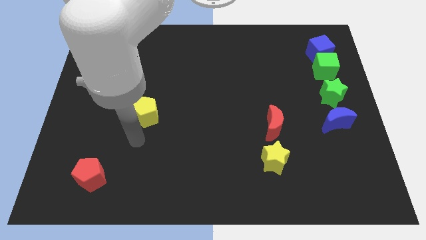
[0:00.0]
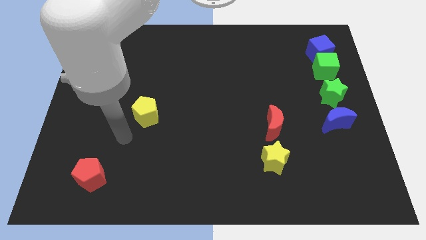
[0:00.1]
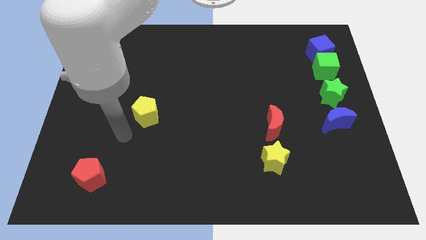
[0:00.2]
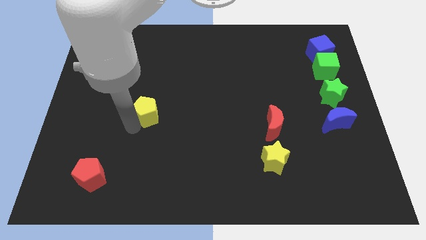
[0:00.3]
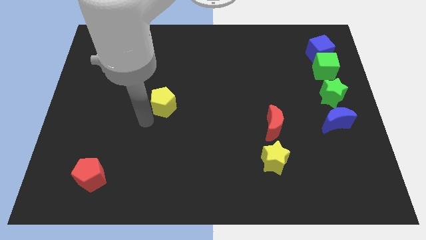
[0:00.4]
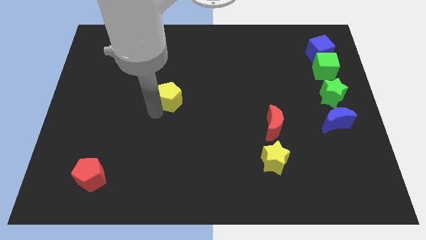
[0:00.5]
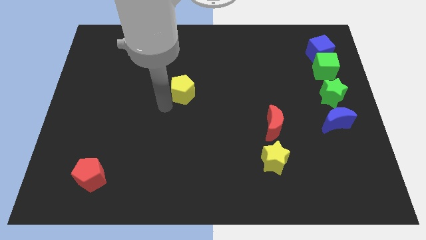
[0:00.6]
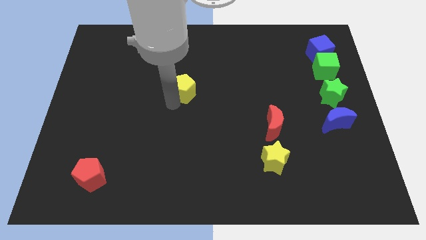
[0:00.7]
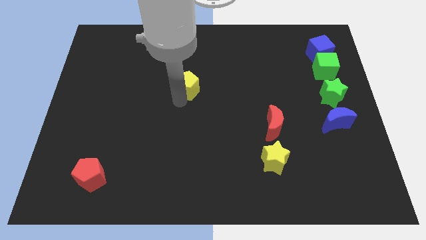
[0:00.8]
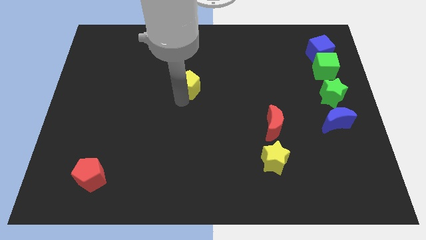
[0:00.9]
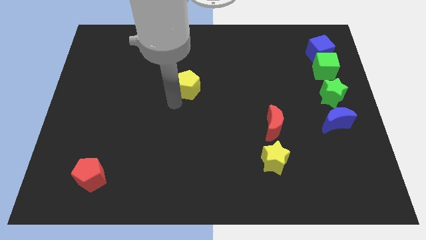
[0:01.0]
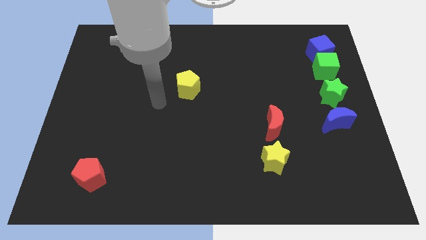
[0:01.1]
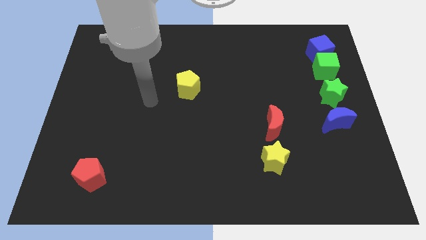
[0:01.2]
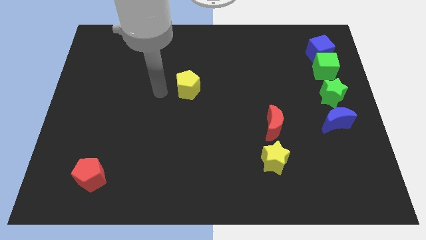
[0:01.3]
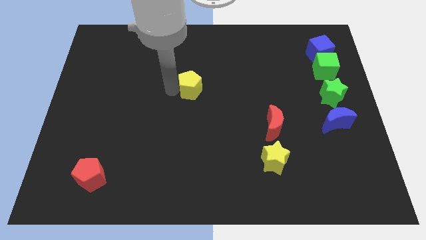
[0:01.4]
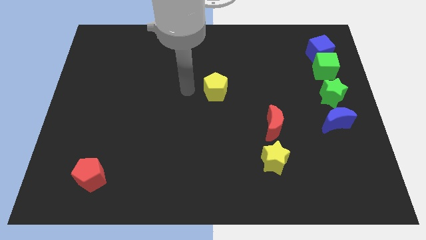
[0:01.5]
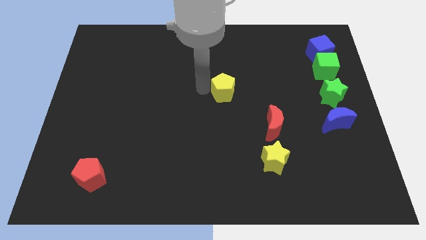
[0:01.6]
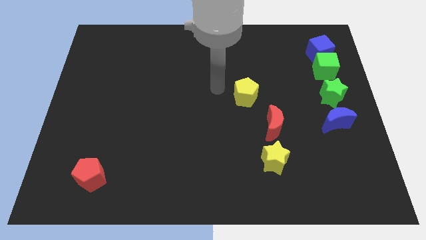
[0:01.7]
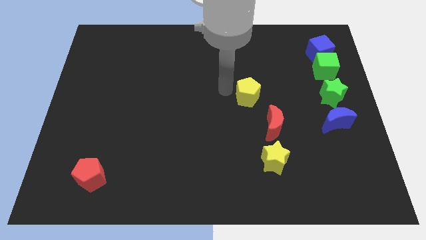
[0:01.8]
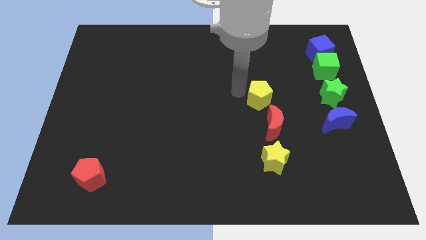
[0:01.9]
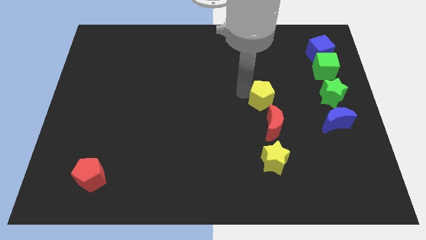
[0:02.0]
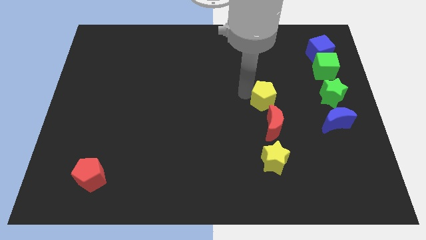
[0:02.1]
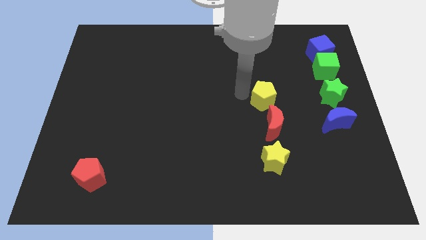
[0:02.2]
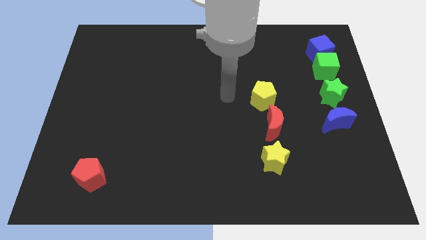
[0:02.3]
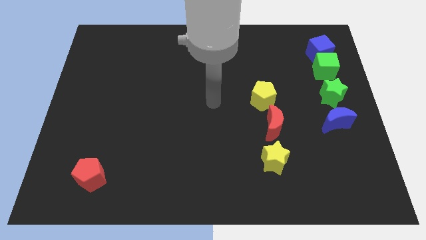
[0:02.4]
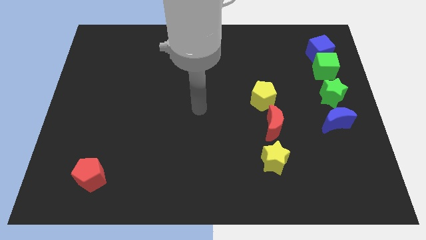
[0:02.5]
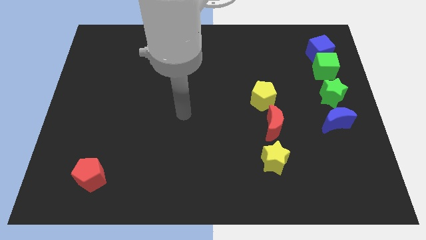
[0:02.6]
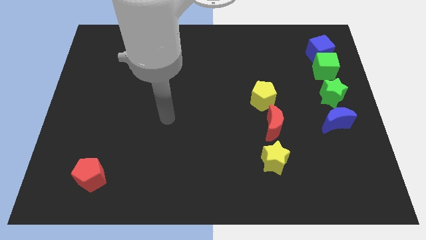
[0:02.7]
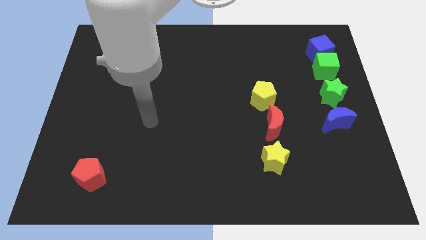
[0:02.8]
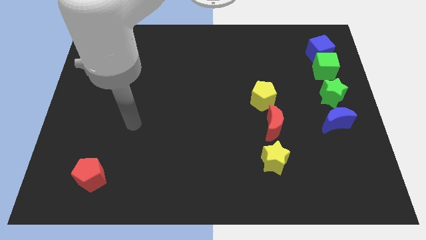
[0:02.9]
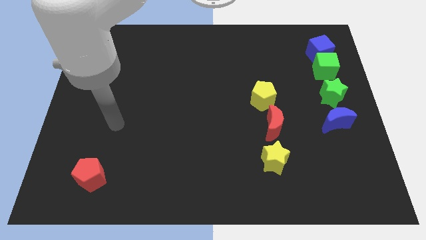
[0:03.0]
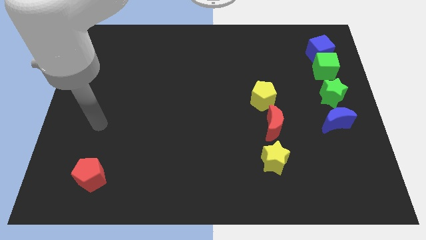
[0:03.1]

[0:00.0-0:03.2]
place yellow pentagon above red moon

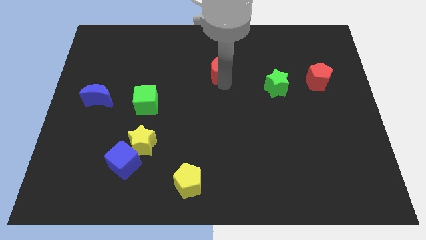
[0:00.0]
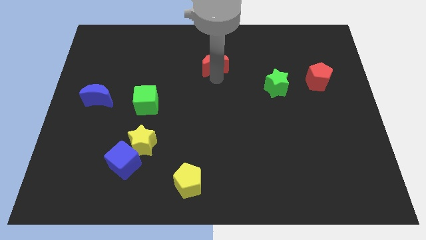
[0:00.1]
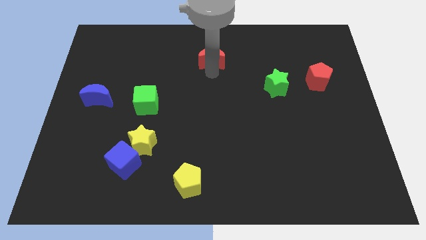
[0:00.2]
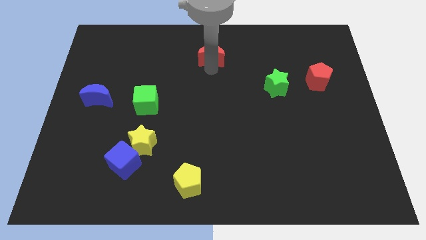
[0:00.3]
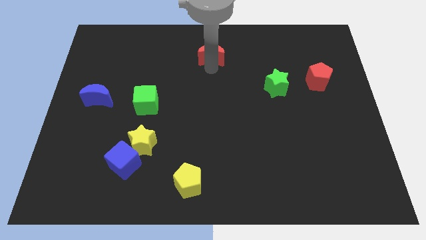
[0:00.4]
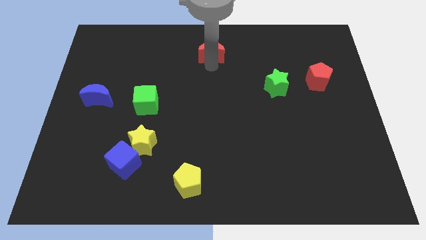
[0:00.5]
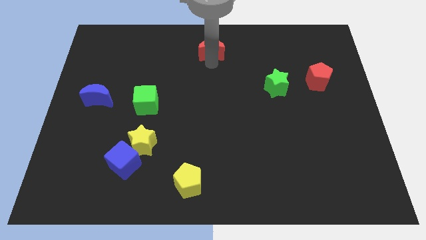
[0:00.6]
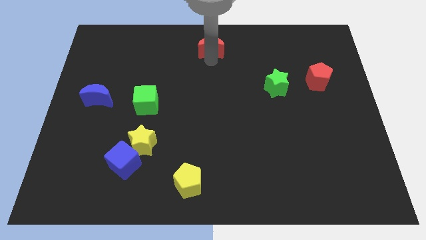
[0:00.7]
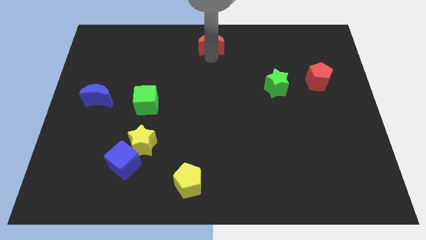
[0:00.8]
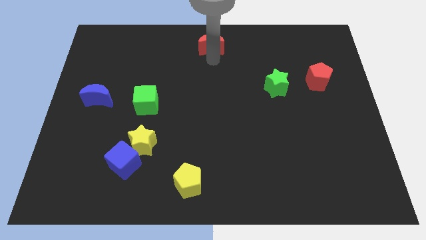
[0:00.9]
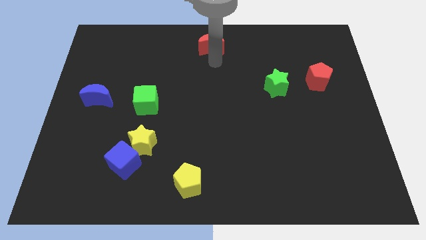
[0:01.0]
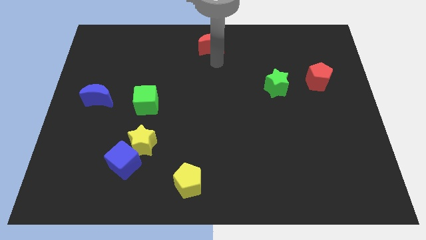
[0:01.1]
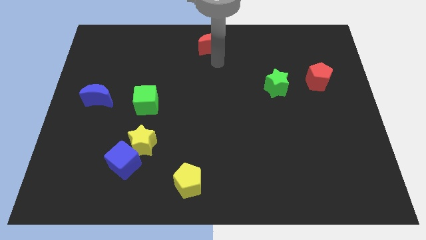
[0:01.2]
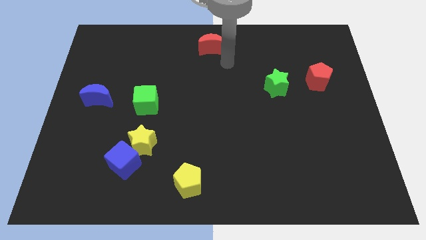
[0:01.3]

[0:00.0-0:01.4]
push the red crescent to the top center of the board

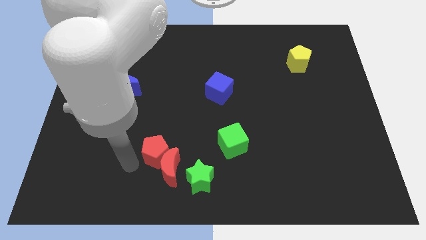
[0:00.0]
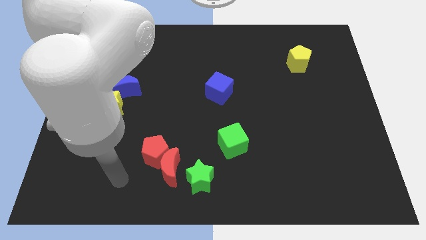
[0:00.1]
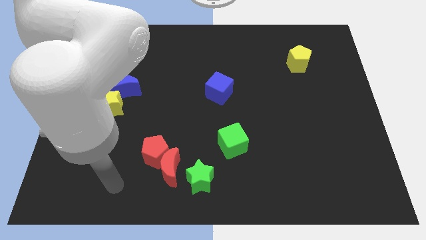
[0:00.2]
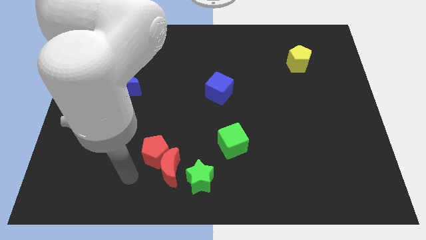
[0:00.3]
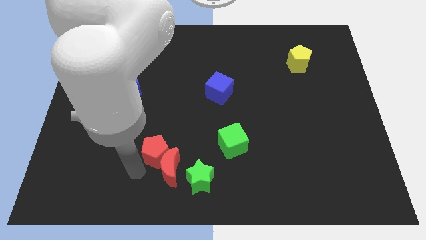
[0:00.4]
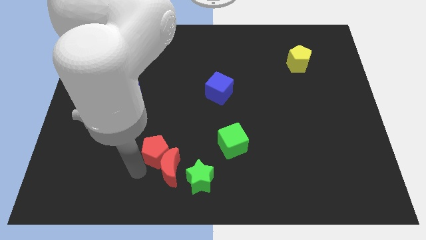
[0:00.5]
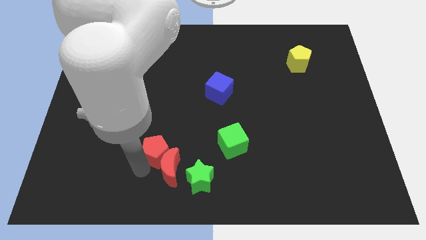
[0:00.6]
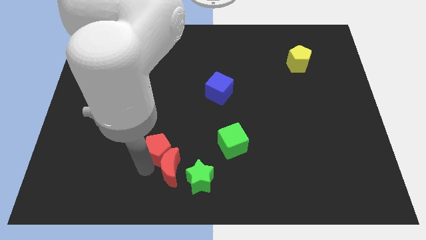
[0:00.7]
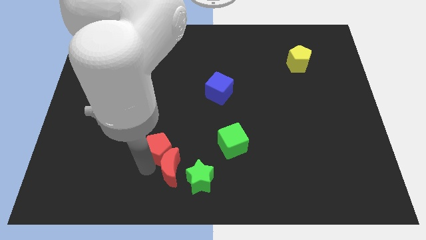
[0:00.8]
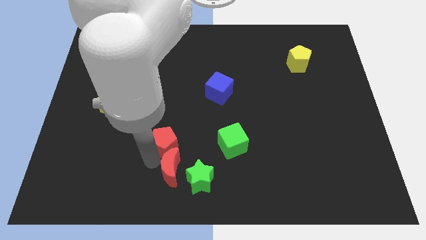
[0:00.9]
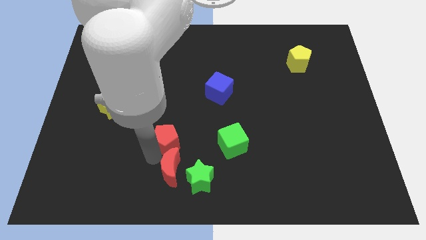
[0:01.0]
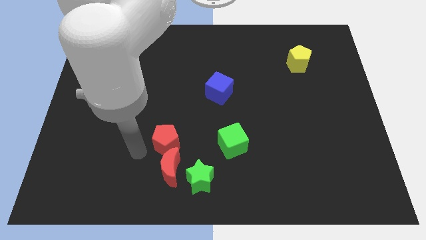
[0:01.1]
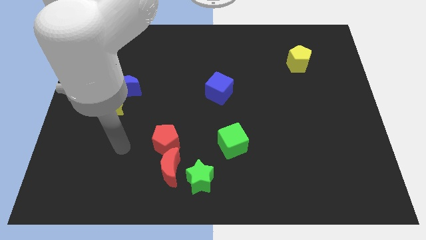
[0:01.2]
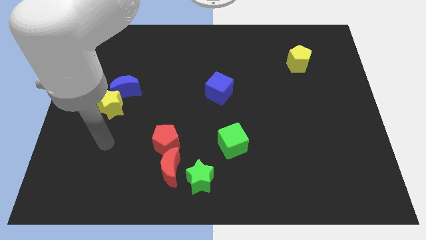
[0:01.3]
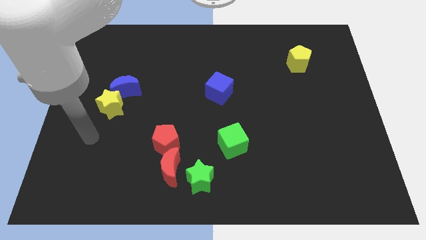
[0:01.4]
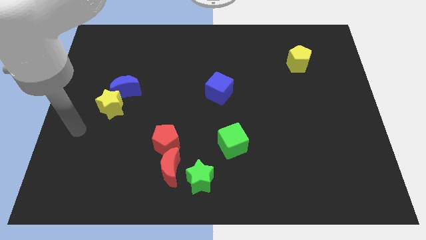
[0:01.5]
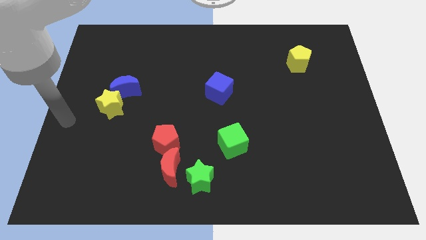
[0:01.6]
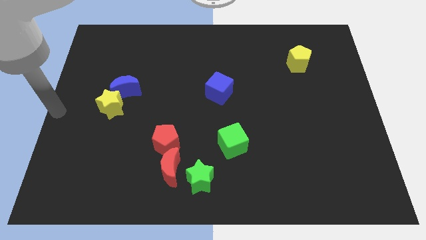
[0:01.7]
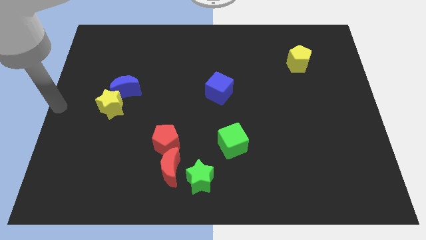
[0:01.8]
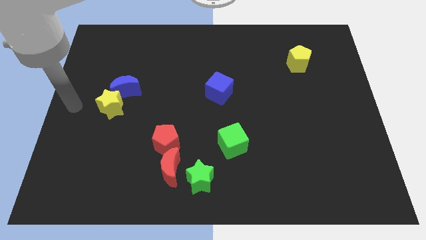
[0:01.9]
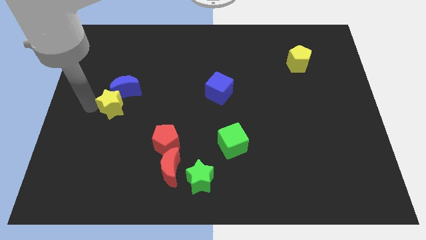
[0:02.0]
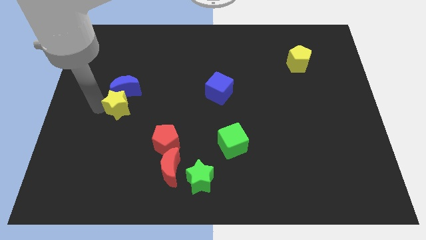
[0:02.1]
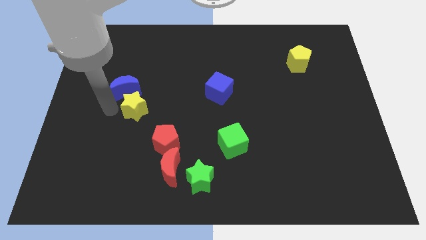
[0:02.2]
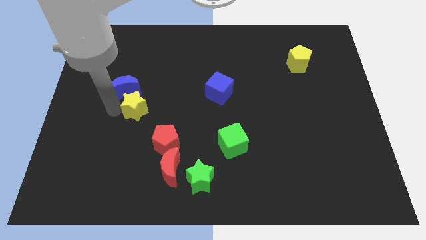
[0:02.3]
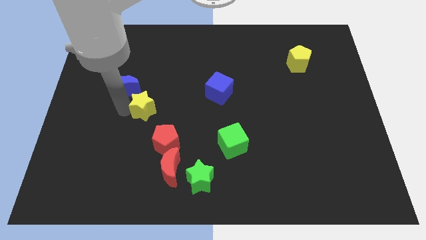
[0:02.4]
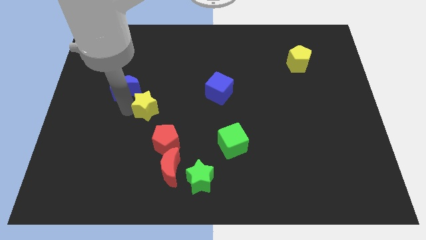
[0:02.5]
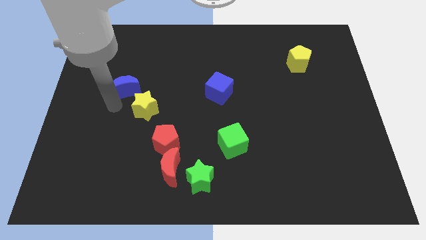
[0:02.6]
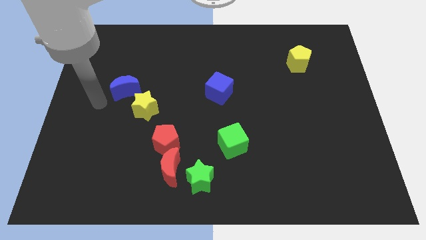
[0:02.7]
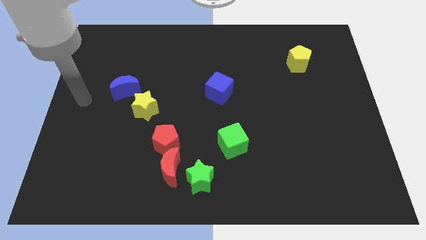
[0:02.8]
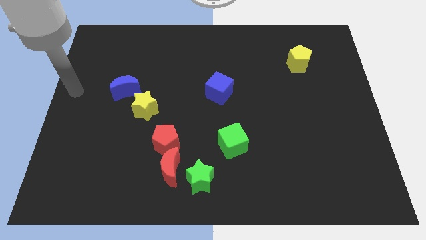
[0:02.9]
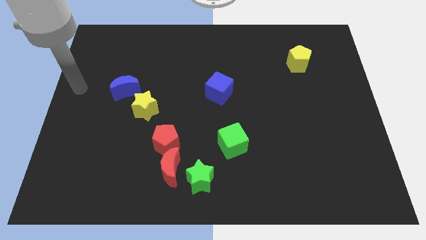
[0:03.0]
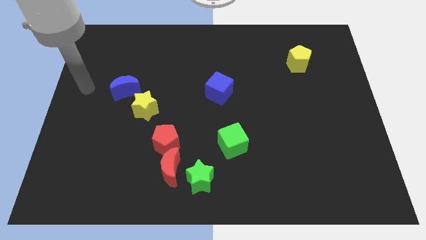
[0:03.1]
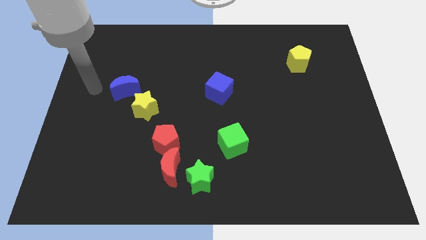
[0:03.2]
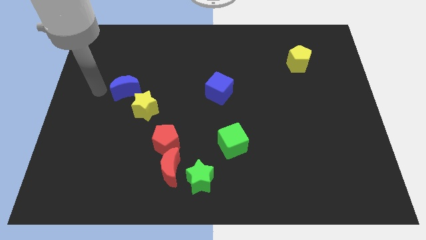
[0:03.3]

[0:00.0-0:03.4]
place the yellow star and red pentagon diagonally in between the blue crescent and red crescent

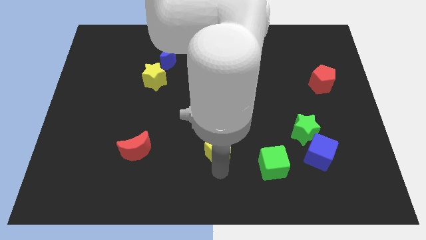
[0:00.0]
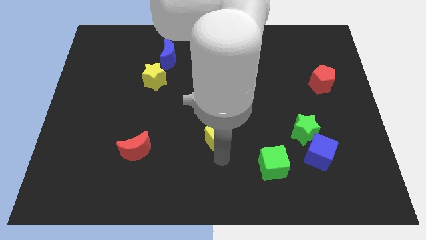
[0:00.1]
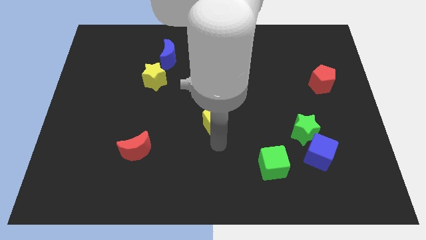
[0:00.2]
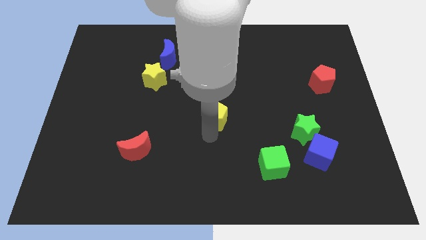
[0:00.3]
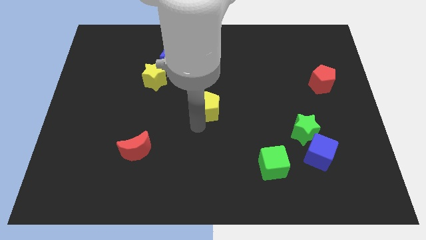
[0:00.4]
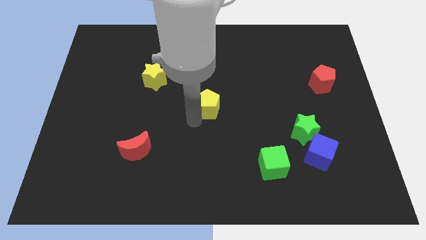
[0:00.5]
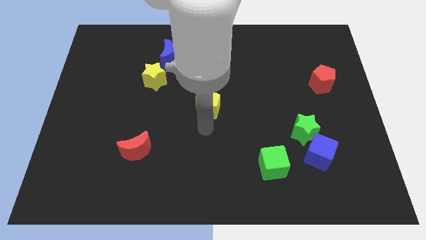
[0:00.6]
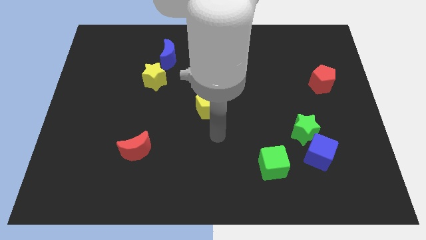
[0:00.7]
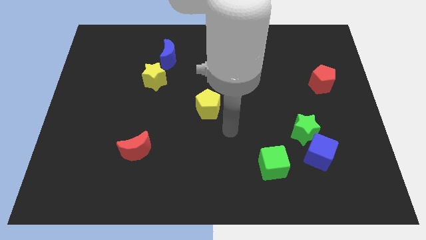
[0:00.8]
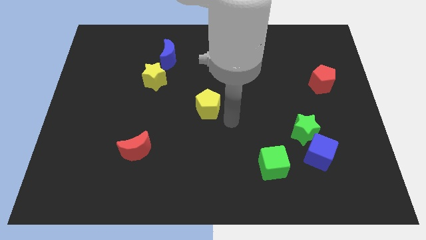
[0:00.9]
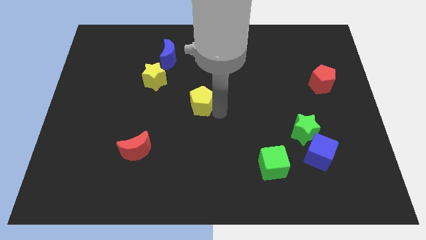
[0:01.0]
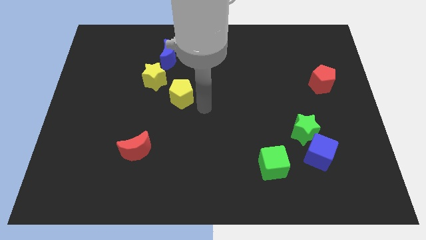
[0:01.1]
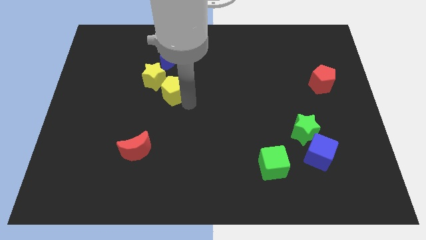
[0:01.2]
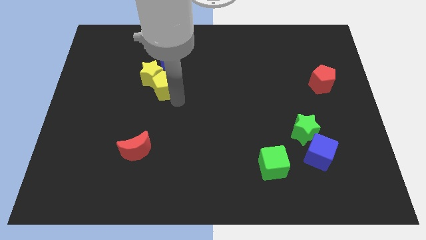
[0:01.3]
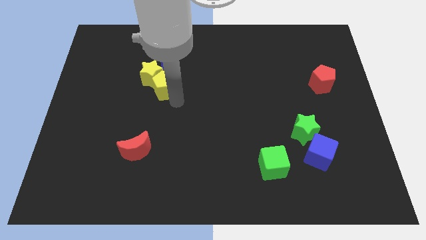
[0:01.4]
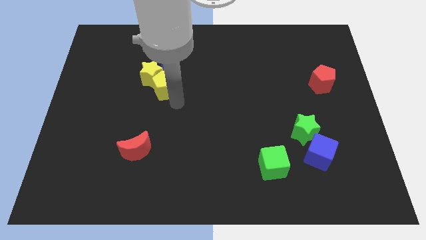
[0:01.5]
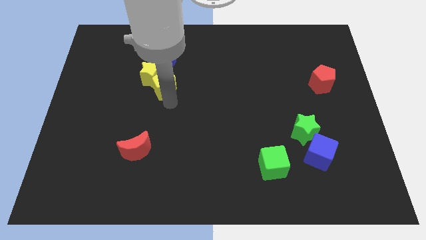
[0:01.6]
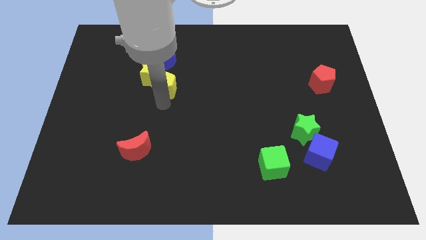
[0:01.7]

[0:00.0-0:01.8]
place the yellow pentagon into the yellow star
